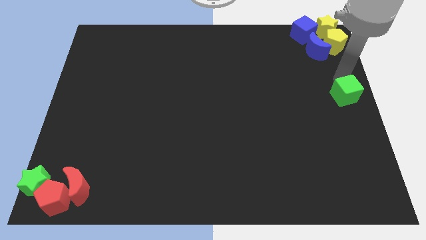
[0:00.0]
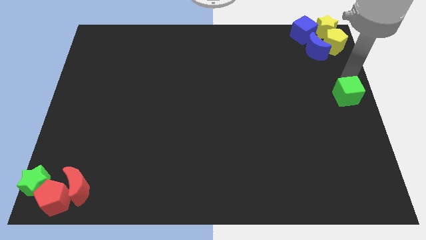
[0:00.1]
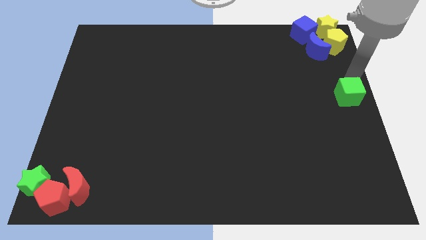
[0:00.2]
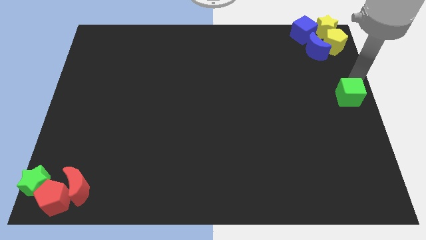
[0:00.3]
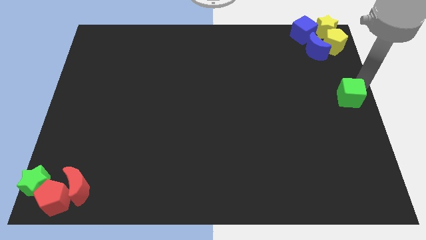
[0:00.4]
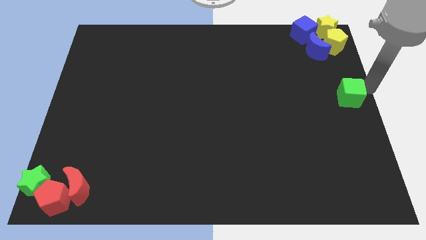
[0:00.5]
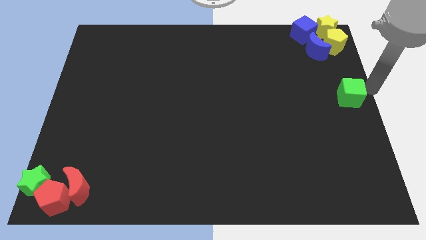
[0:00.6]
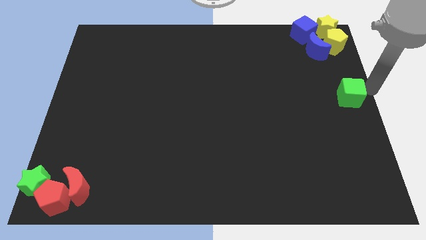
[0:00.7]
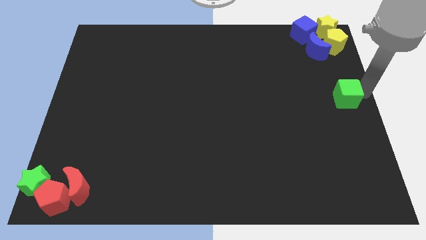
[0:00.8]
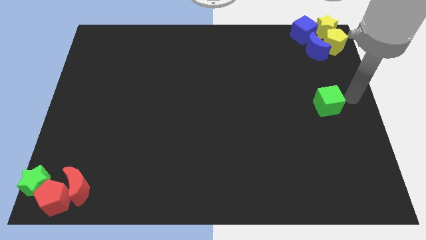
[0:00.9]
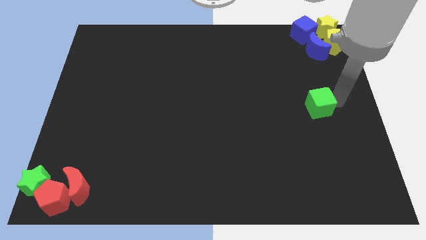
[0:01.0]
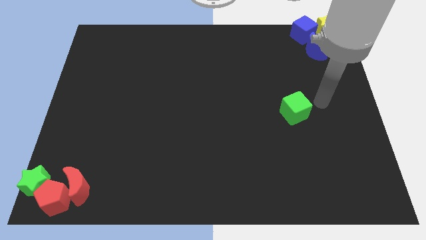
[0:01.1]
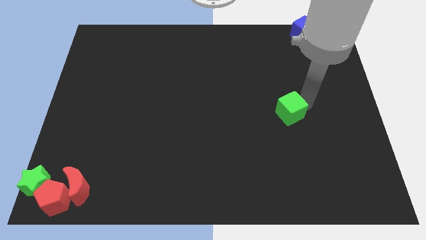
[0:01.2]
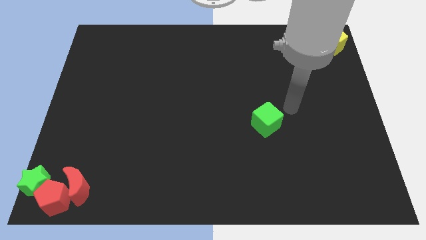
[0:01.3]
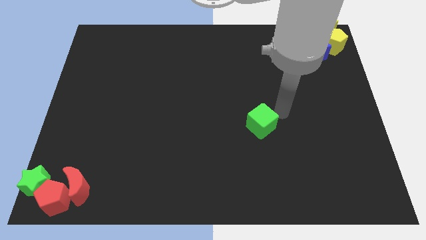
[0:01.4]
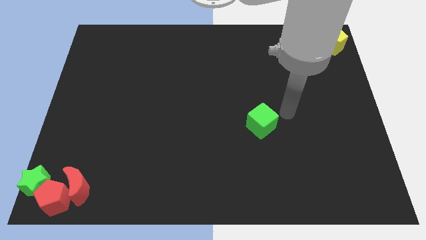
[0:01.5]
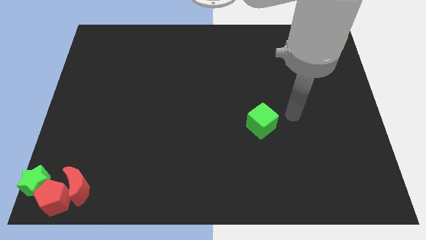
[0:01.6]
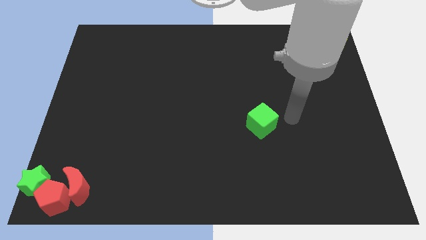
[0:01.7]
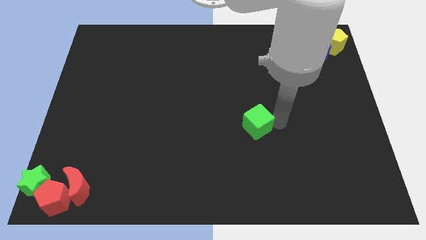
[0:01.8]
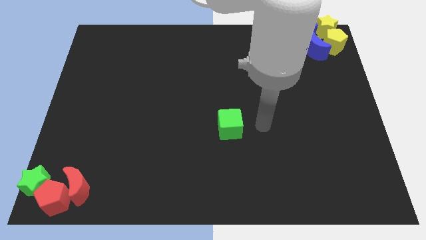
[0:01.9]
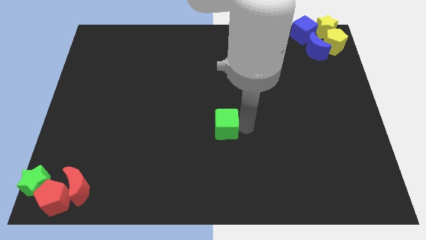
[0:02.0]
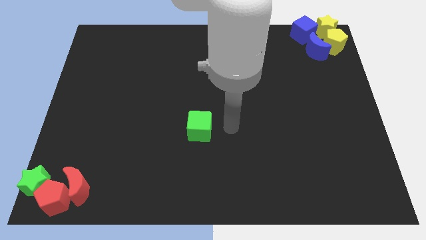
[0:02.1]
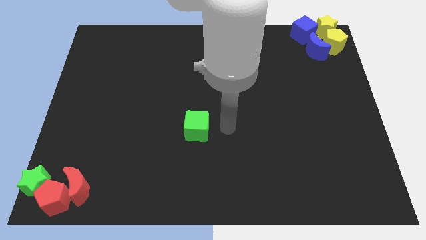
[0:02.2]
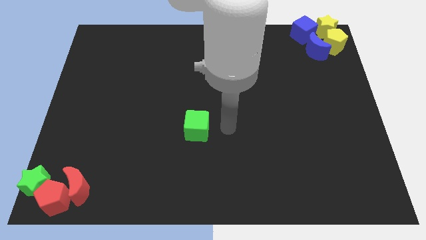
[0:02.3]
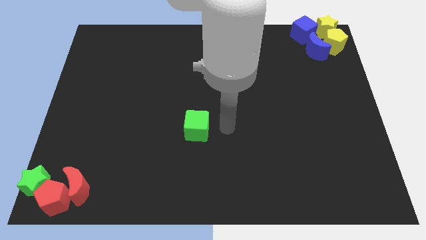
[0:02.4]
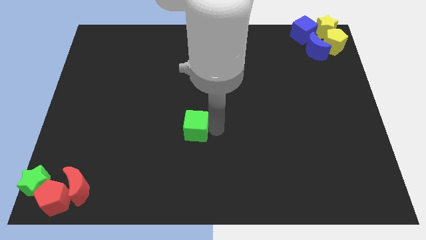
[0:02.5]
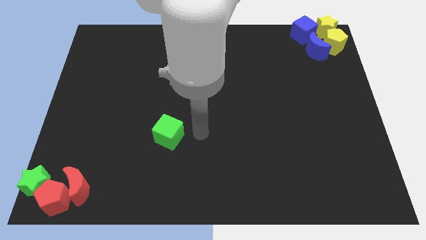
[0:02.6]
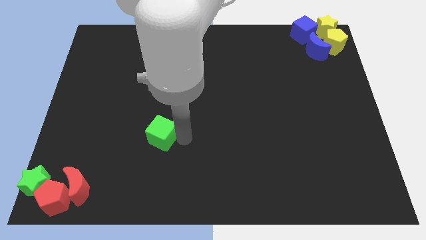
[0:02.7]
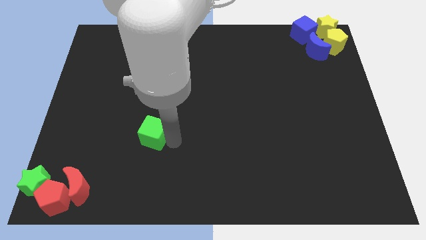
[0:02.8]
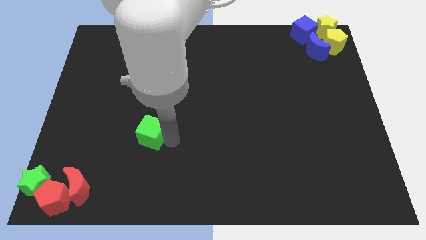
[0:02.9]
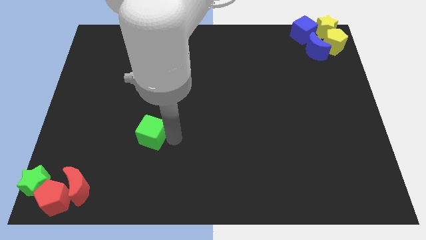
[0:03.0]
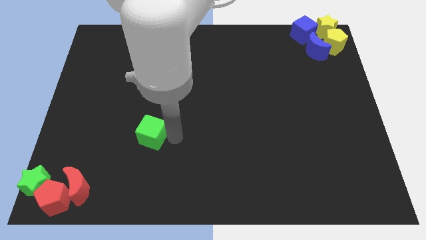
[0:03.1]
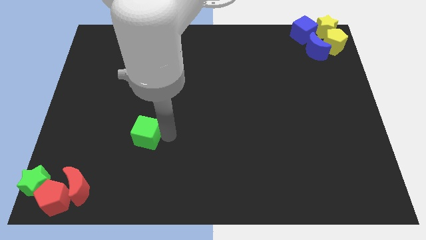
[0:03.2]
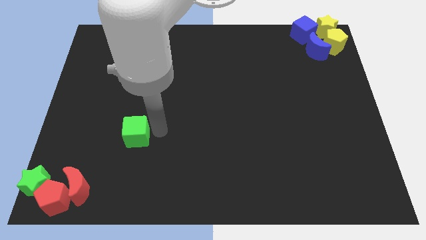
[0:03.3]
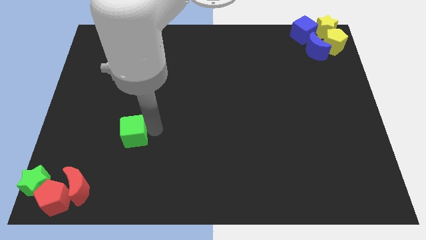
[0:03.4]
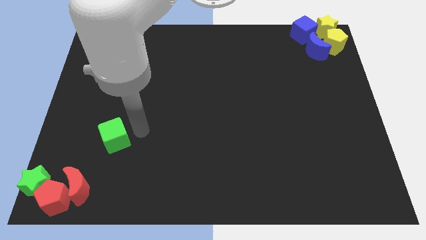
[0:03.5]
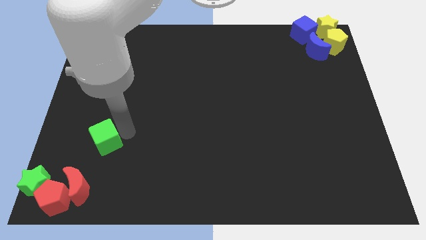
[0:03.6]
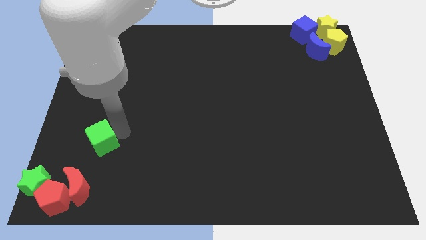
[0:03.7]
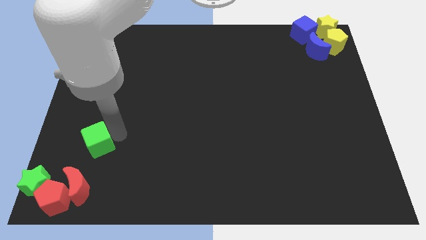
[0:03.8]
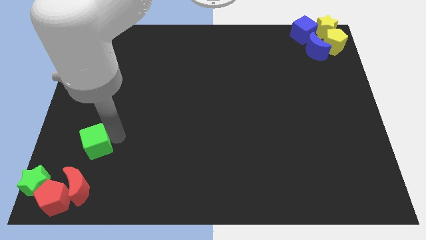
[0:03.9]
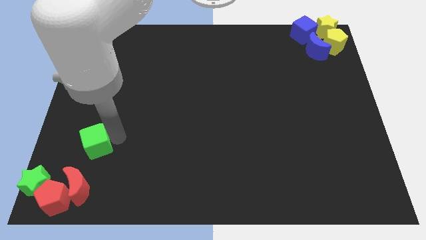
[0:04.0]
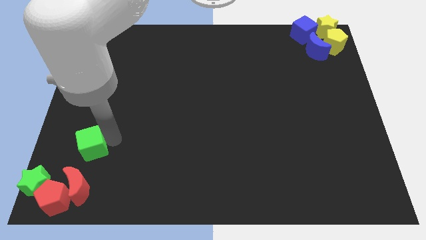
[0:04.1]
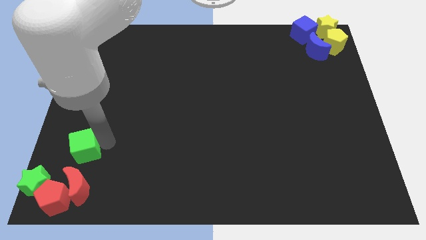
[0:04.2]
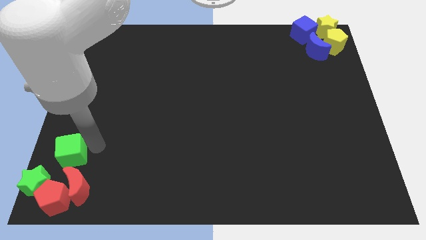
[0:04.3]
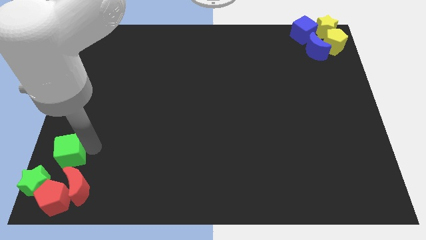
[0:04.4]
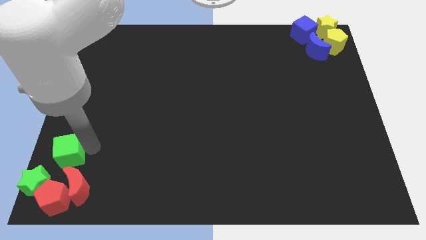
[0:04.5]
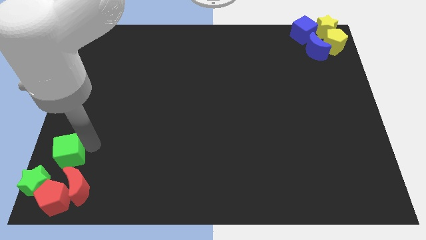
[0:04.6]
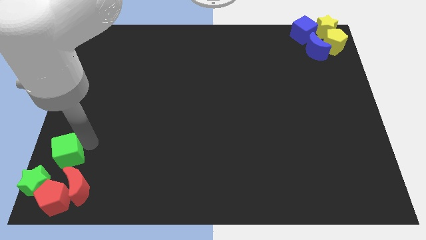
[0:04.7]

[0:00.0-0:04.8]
move the green cube to the bottom left corner

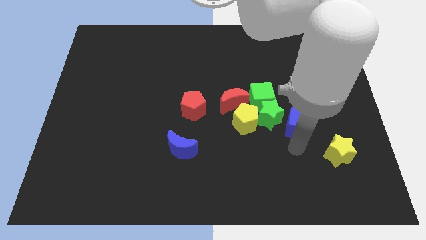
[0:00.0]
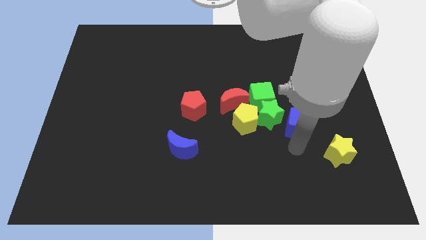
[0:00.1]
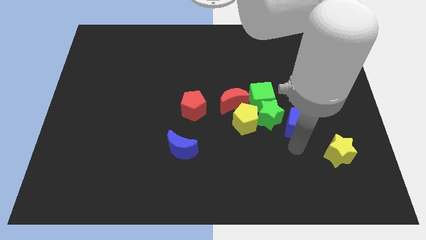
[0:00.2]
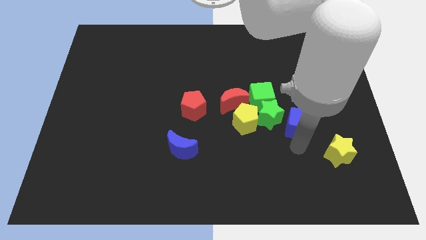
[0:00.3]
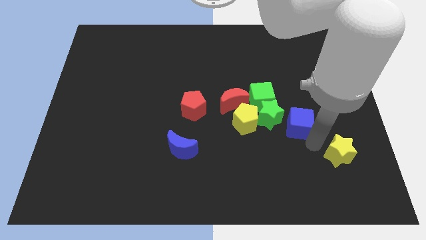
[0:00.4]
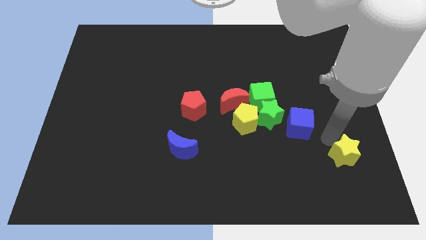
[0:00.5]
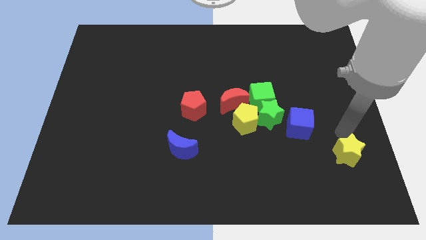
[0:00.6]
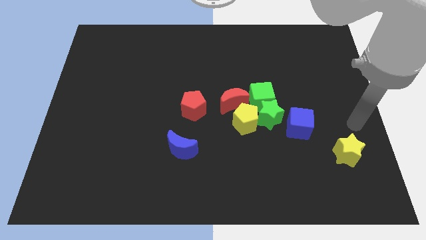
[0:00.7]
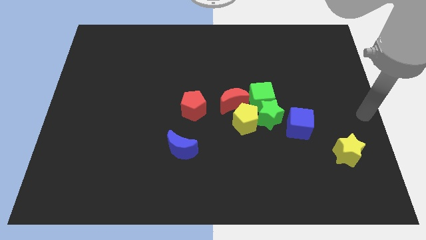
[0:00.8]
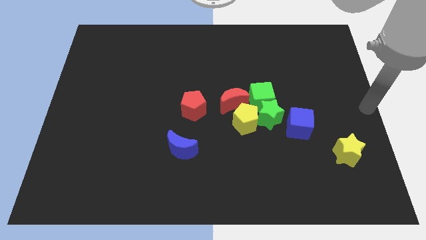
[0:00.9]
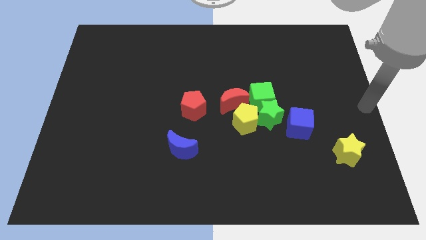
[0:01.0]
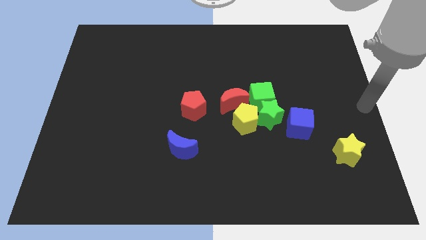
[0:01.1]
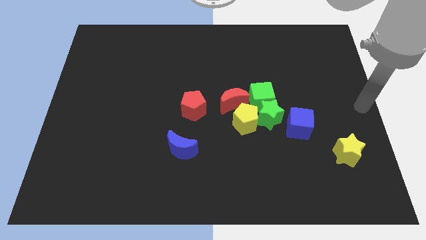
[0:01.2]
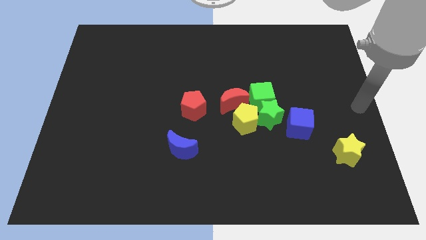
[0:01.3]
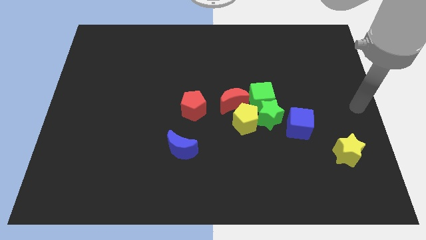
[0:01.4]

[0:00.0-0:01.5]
tap yellow star slightly

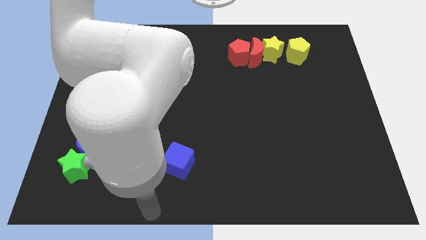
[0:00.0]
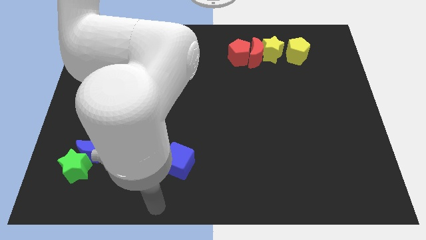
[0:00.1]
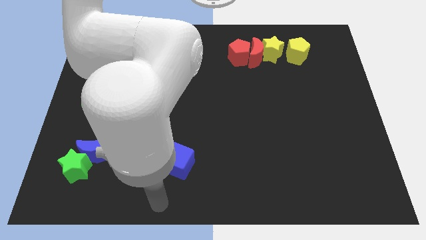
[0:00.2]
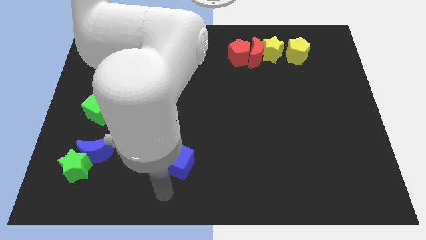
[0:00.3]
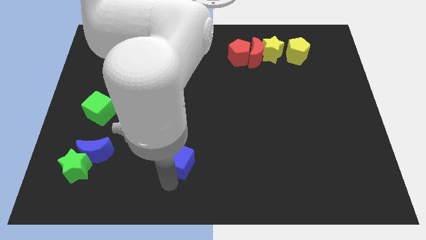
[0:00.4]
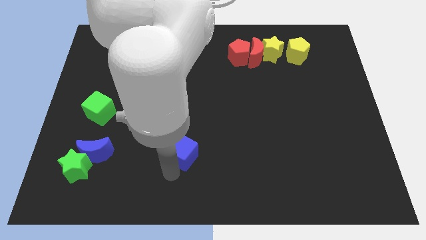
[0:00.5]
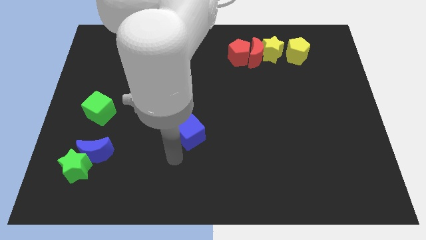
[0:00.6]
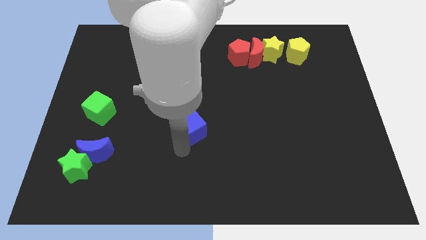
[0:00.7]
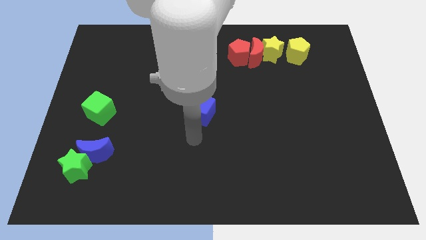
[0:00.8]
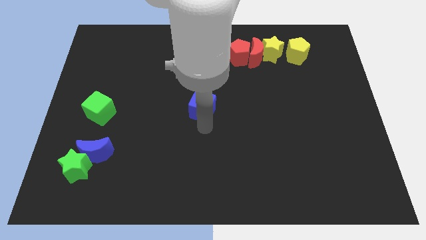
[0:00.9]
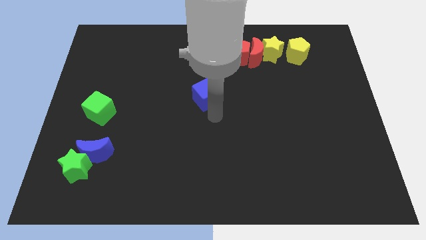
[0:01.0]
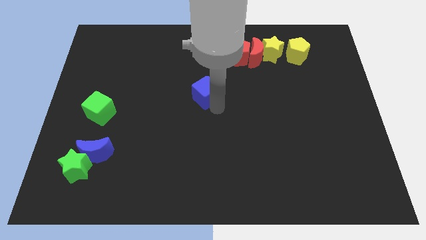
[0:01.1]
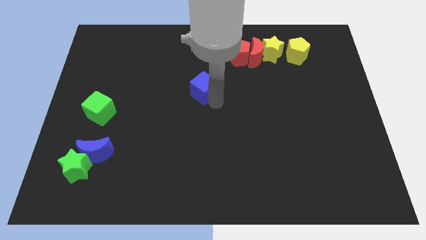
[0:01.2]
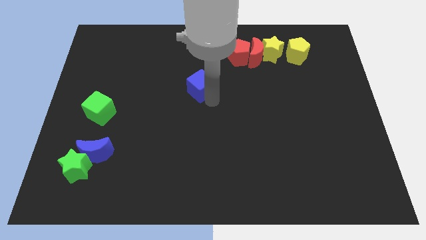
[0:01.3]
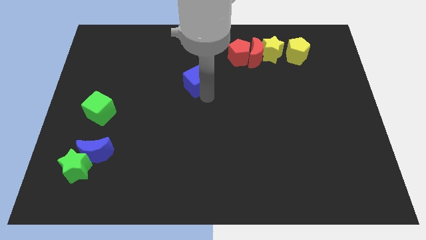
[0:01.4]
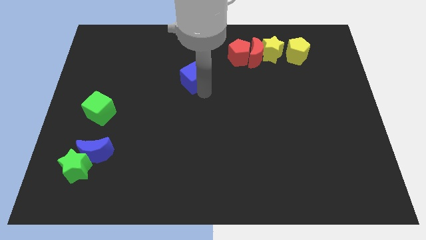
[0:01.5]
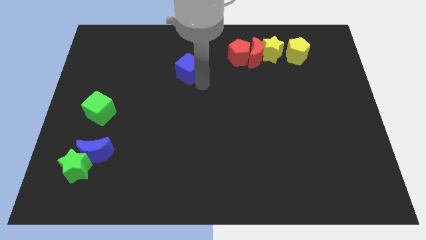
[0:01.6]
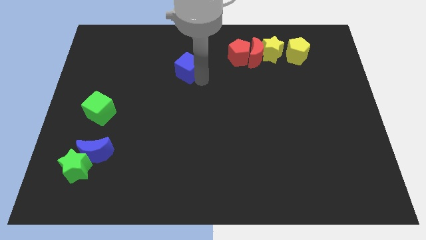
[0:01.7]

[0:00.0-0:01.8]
place the blue cube between the red pentagon and green cube

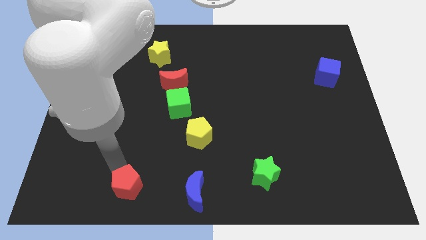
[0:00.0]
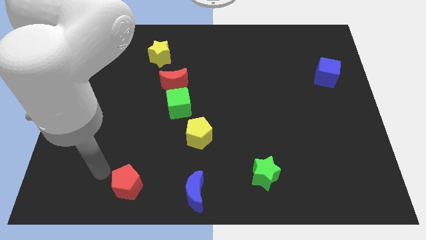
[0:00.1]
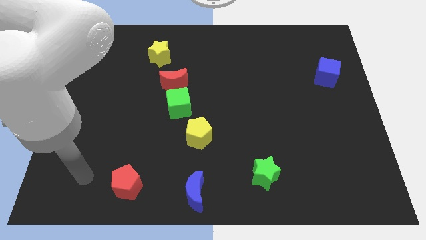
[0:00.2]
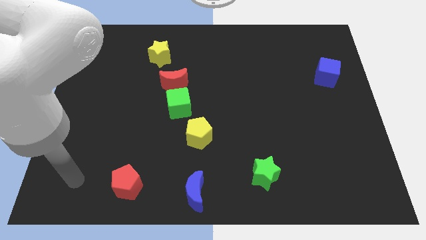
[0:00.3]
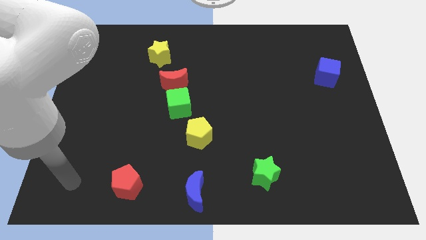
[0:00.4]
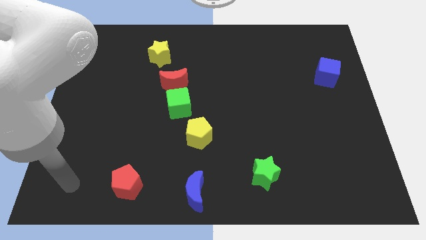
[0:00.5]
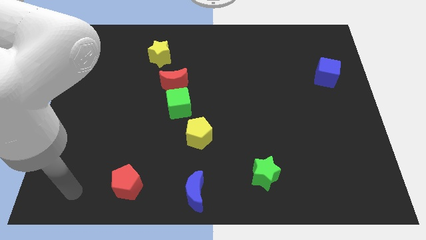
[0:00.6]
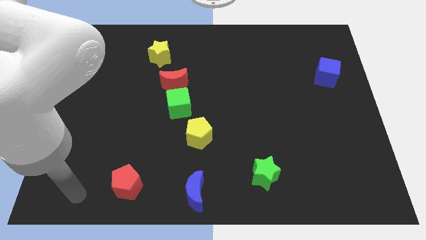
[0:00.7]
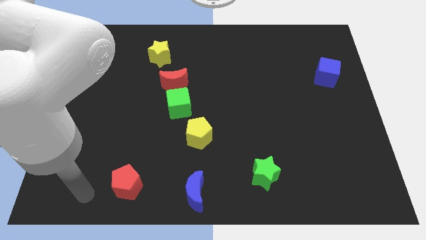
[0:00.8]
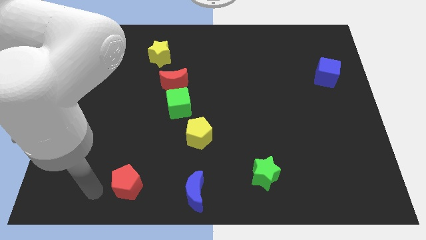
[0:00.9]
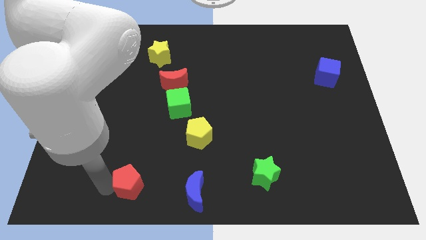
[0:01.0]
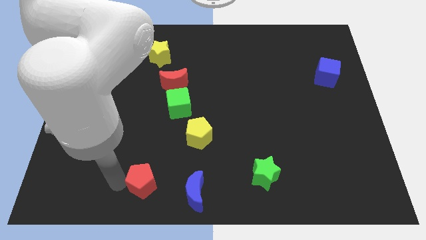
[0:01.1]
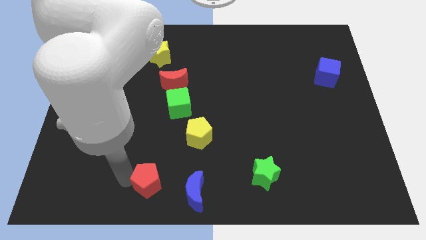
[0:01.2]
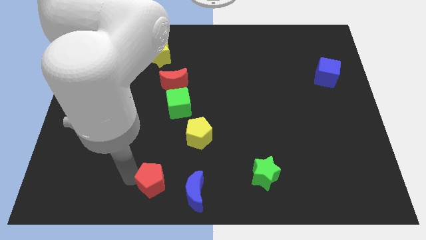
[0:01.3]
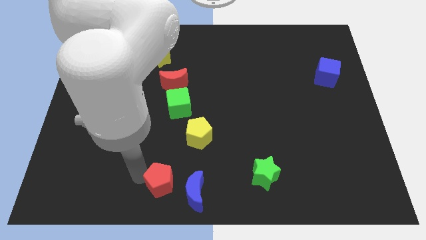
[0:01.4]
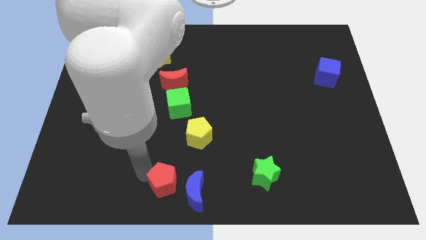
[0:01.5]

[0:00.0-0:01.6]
push the red pentagon towards the left side of the blue crescent
